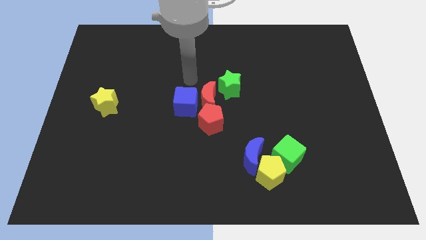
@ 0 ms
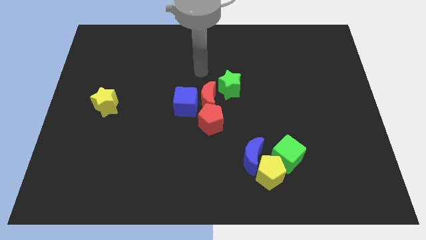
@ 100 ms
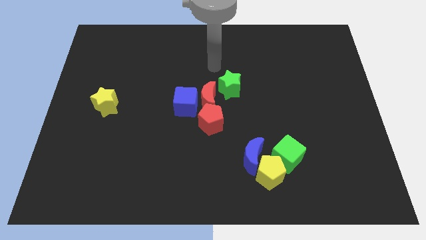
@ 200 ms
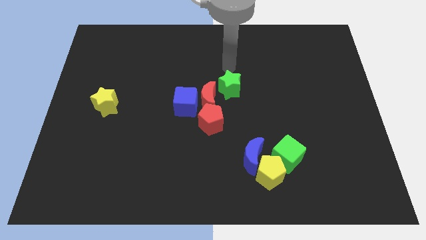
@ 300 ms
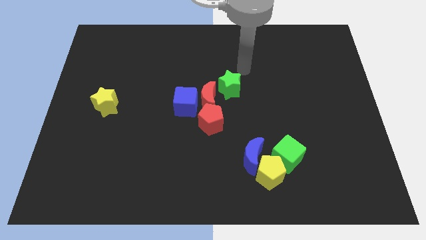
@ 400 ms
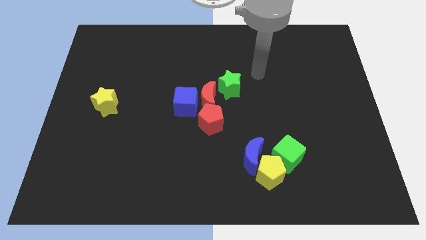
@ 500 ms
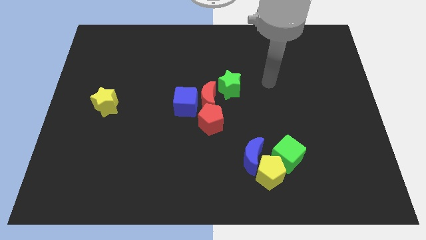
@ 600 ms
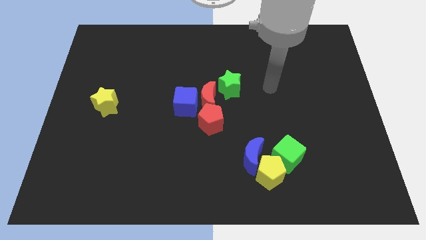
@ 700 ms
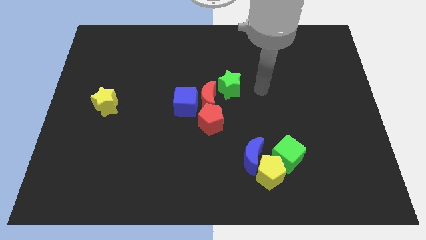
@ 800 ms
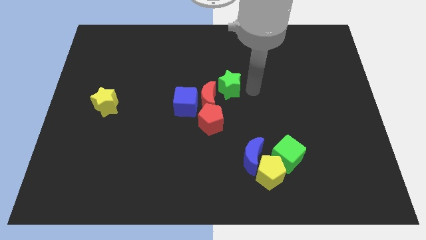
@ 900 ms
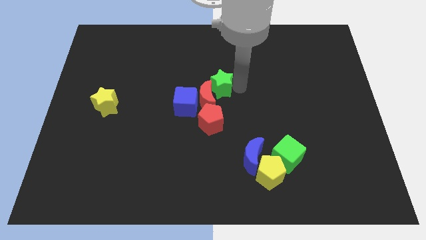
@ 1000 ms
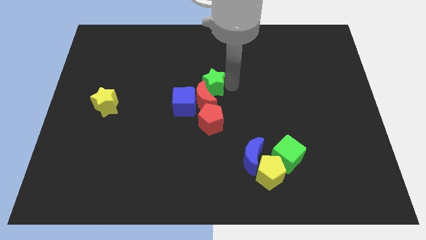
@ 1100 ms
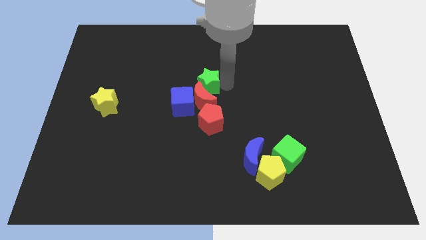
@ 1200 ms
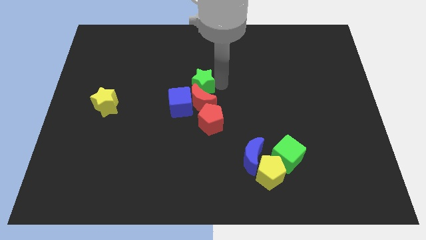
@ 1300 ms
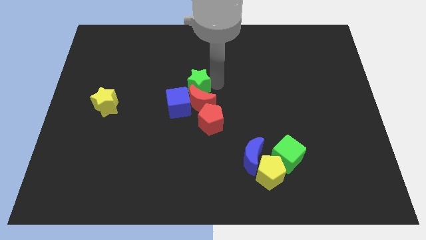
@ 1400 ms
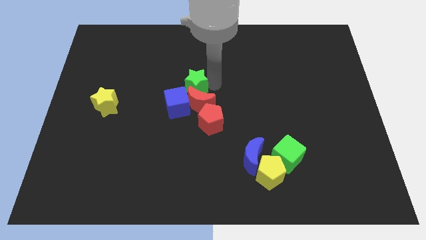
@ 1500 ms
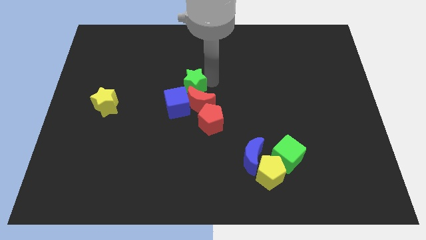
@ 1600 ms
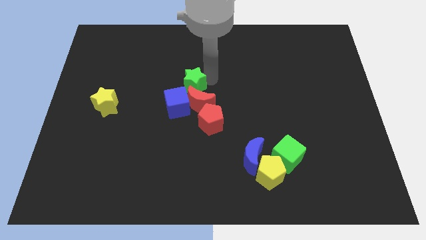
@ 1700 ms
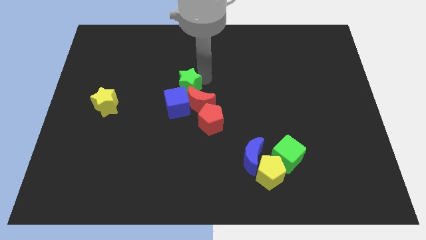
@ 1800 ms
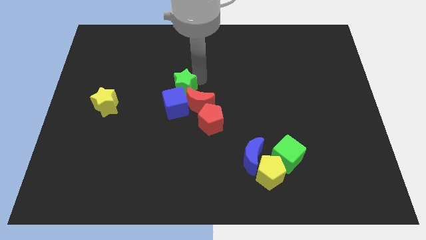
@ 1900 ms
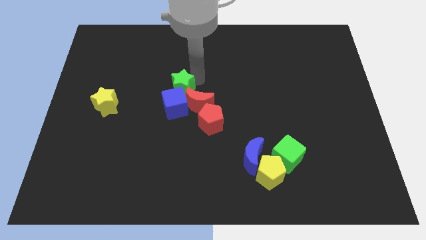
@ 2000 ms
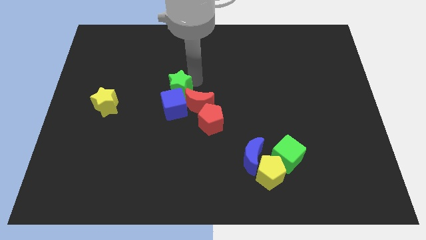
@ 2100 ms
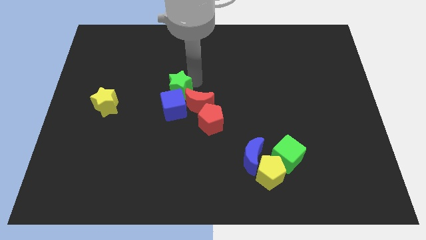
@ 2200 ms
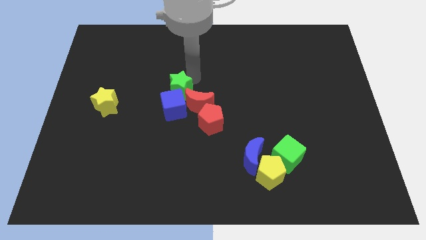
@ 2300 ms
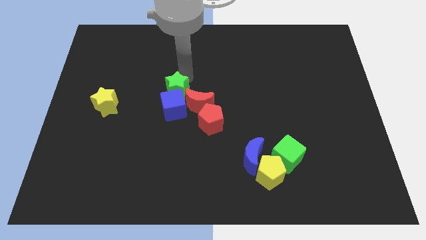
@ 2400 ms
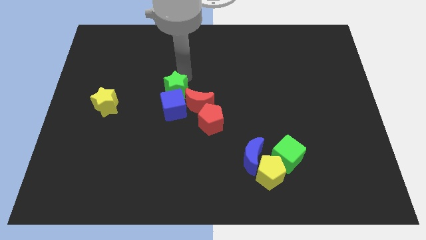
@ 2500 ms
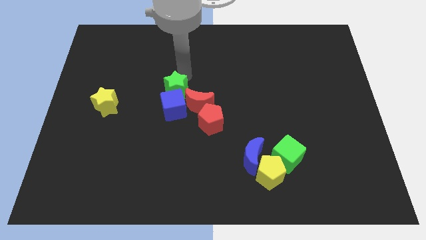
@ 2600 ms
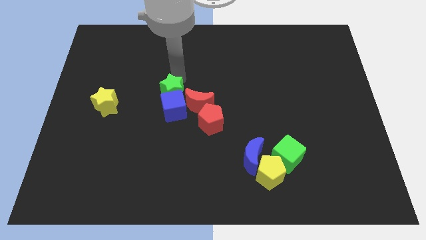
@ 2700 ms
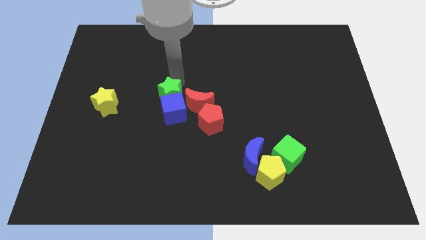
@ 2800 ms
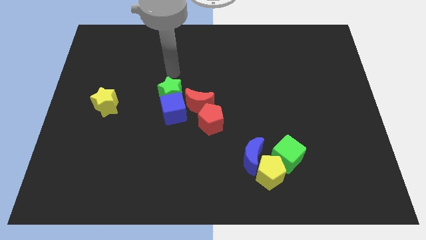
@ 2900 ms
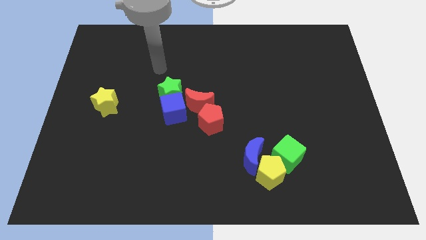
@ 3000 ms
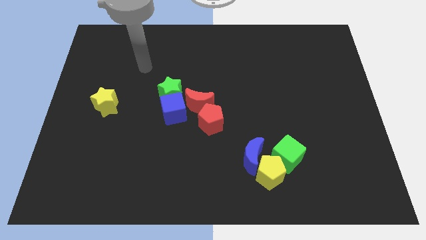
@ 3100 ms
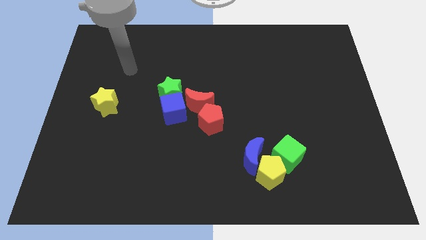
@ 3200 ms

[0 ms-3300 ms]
move the green star at the top of the blue cube

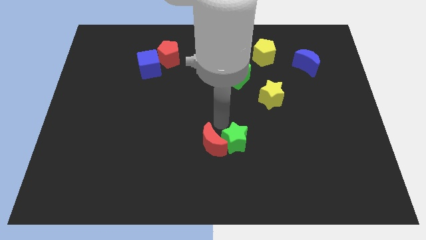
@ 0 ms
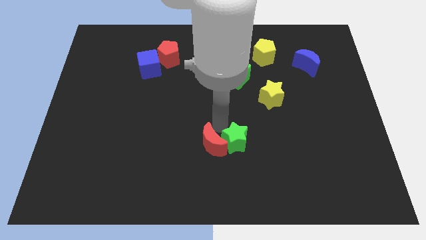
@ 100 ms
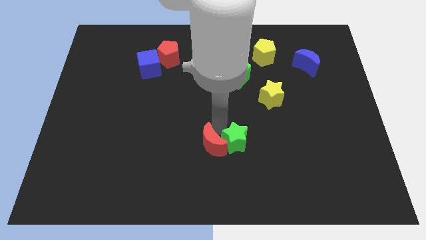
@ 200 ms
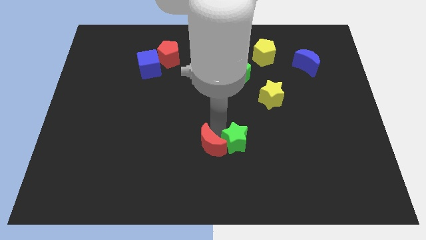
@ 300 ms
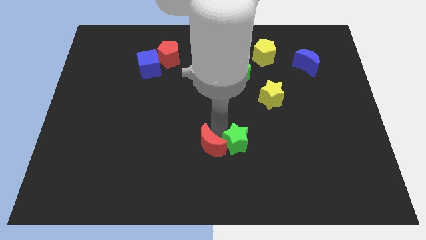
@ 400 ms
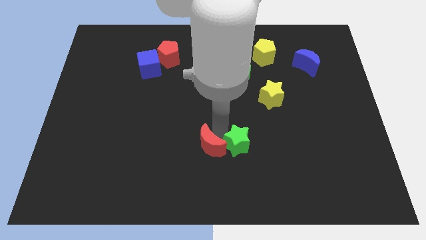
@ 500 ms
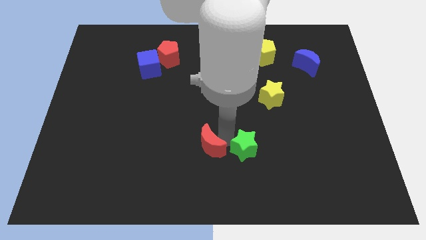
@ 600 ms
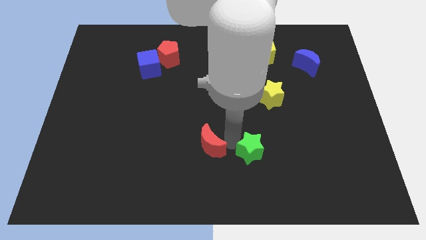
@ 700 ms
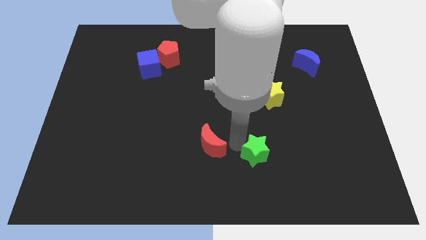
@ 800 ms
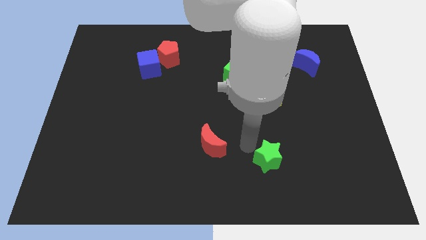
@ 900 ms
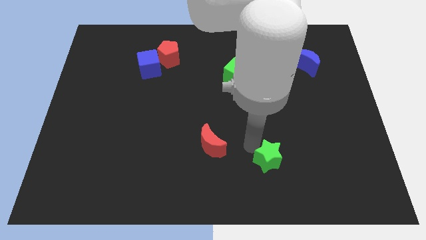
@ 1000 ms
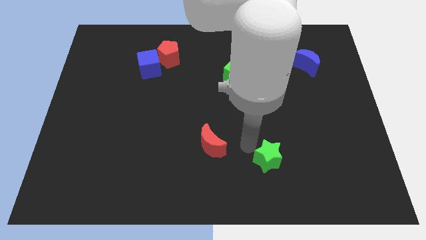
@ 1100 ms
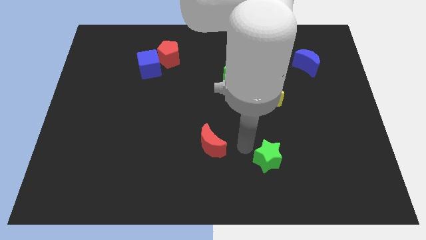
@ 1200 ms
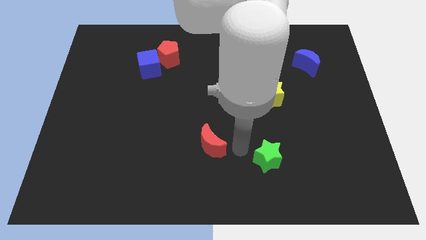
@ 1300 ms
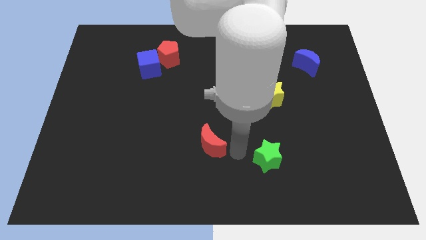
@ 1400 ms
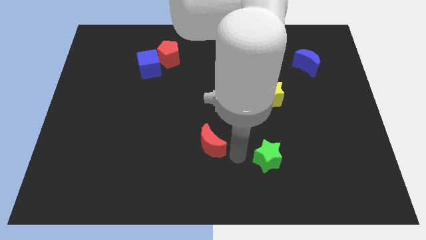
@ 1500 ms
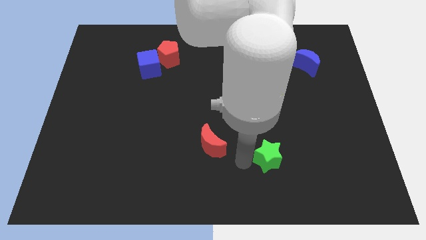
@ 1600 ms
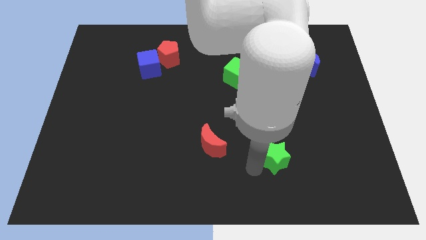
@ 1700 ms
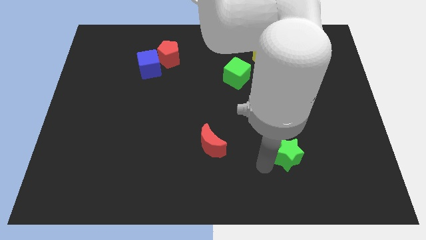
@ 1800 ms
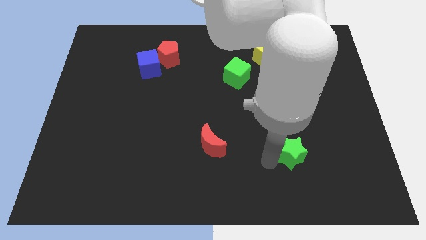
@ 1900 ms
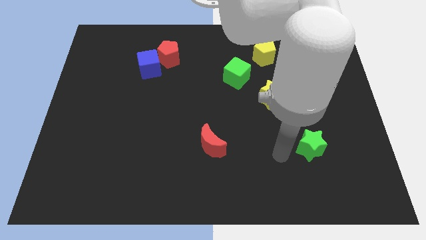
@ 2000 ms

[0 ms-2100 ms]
move the green star towards the right side of the board

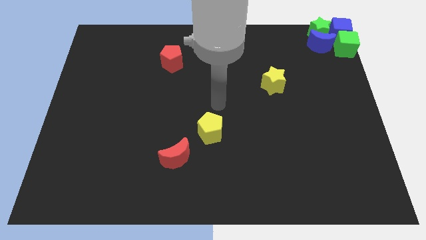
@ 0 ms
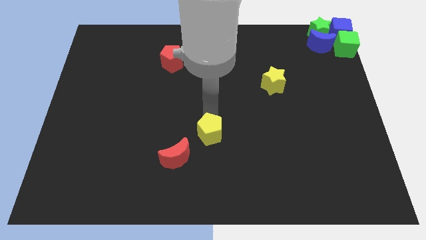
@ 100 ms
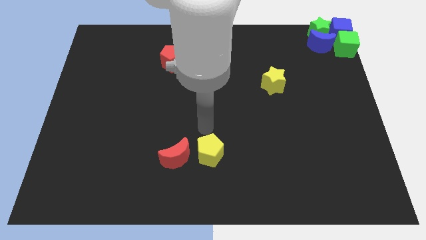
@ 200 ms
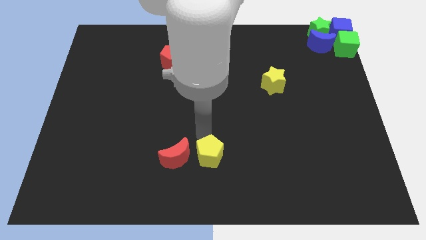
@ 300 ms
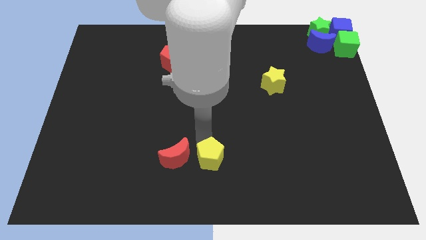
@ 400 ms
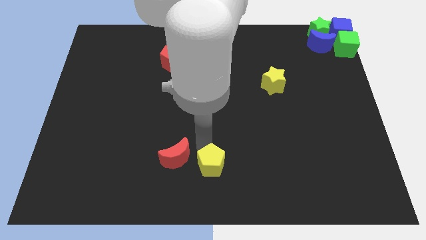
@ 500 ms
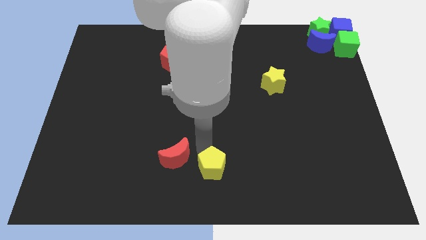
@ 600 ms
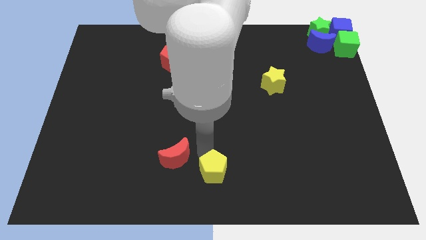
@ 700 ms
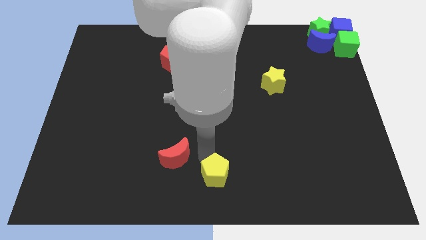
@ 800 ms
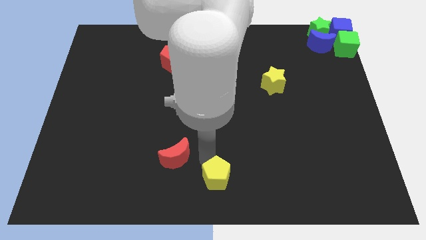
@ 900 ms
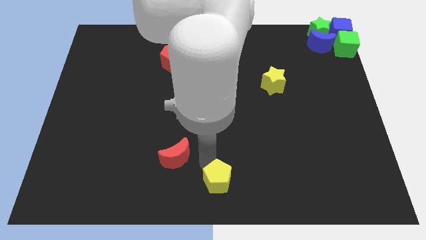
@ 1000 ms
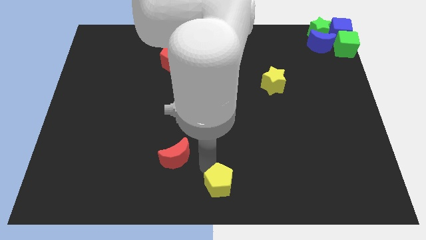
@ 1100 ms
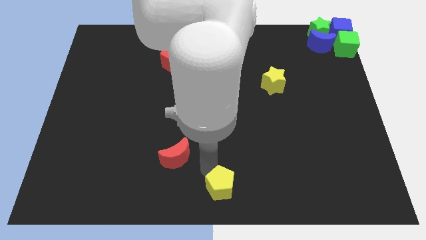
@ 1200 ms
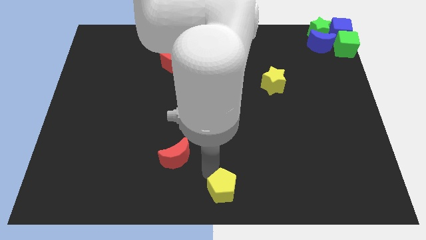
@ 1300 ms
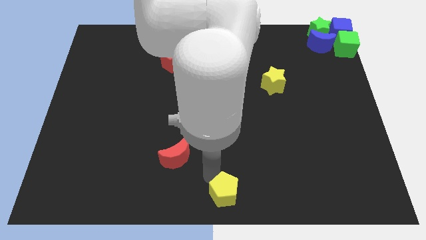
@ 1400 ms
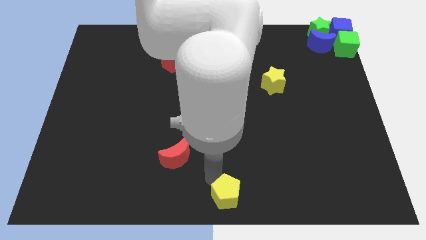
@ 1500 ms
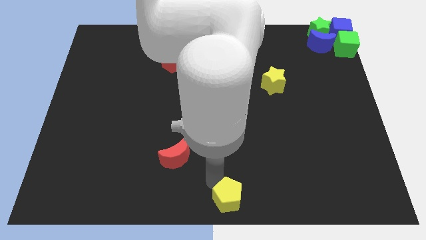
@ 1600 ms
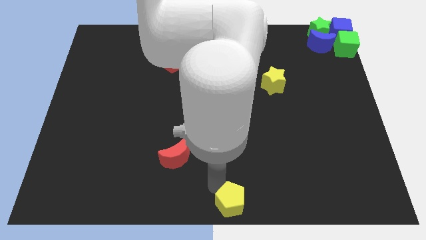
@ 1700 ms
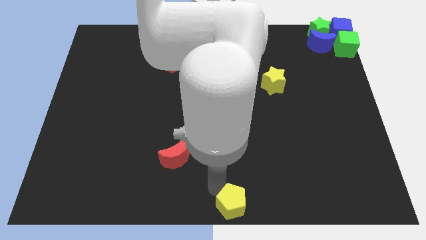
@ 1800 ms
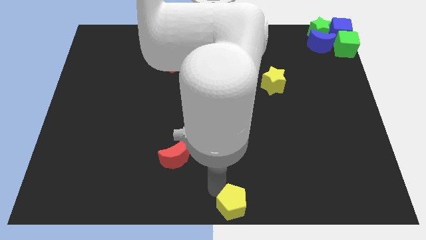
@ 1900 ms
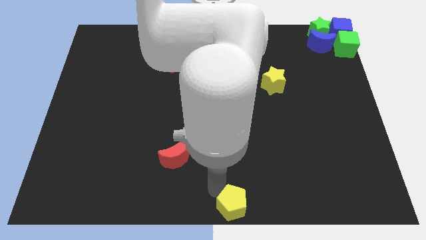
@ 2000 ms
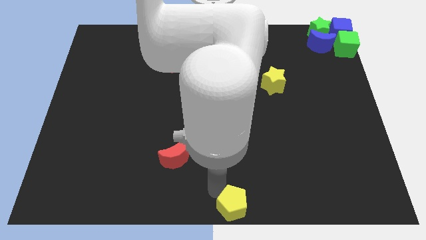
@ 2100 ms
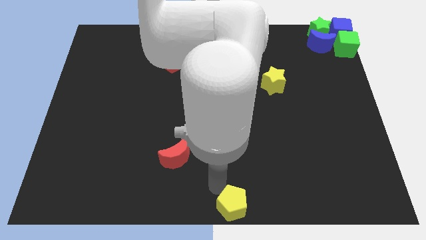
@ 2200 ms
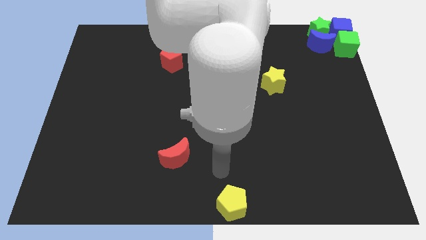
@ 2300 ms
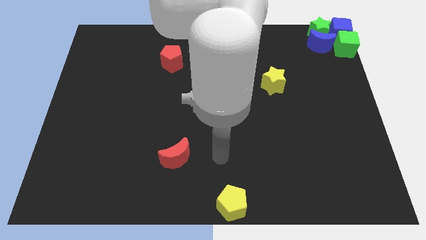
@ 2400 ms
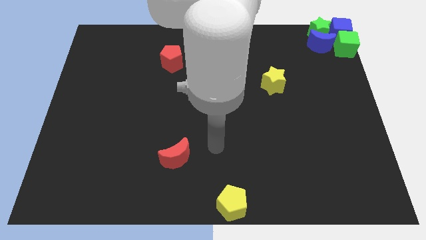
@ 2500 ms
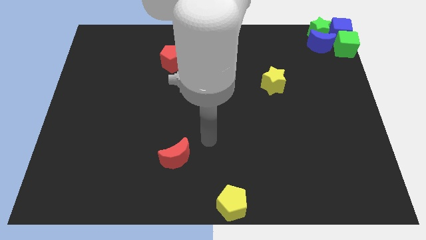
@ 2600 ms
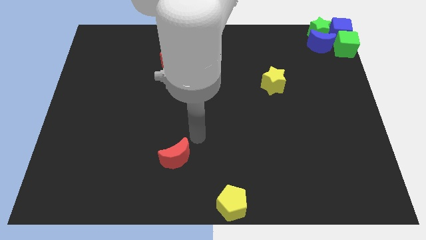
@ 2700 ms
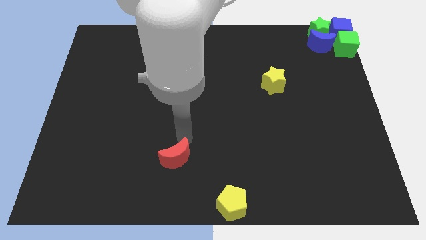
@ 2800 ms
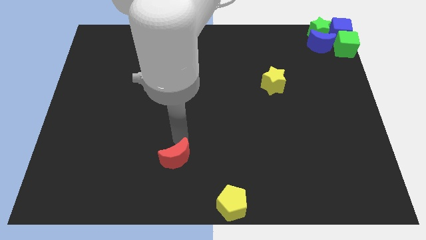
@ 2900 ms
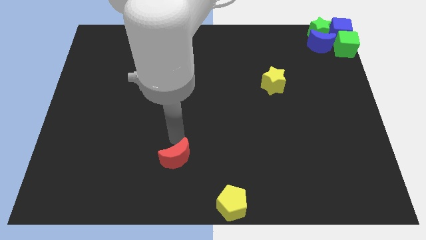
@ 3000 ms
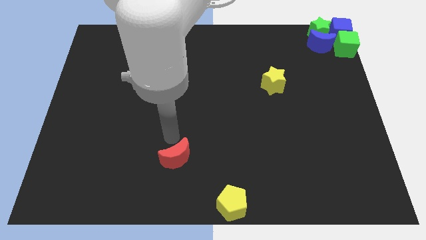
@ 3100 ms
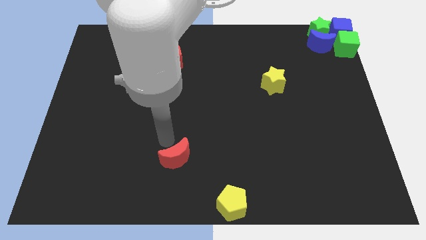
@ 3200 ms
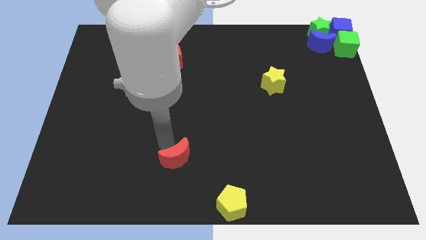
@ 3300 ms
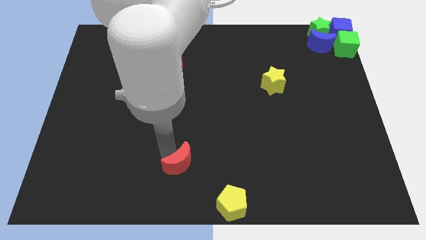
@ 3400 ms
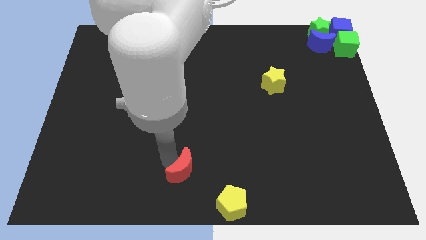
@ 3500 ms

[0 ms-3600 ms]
move the yellow pentagon to the bottom center

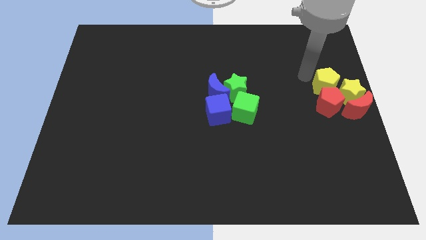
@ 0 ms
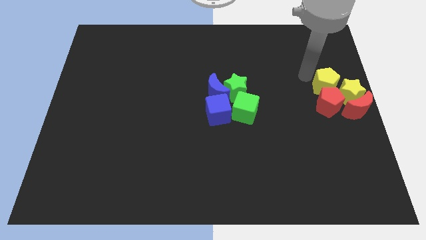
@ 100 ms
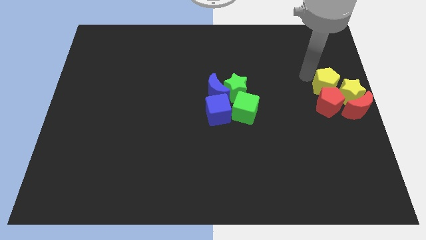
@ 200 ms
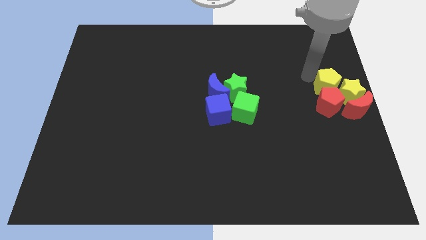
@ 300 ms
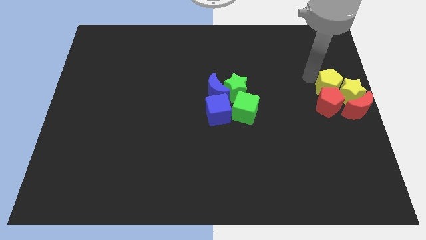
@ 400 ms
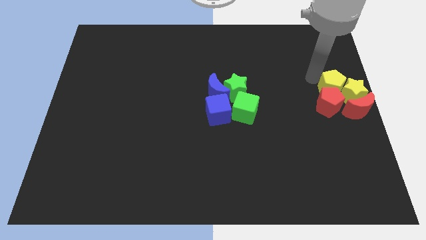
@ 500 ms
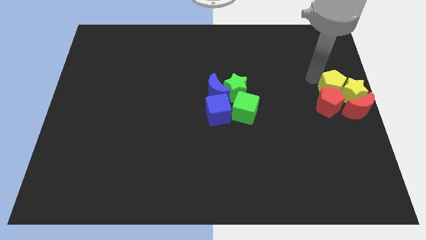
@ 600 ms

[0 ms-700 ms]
move the yellow pentagon close to the yellow star
